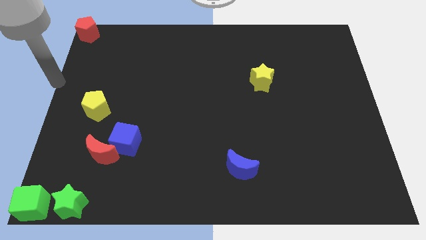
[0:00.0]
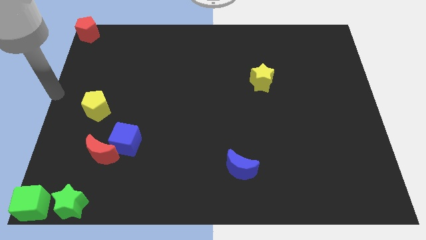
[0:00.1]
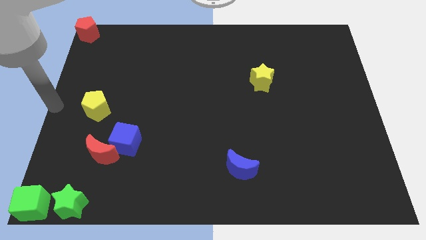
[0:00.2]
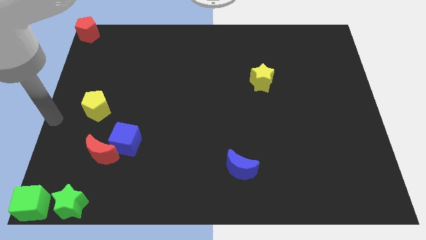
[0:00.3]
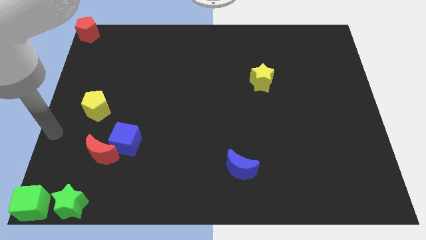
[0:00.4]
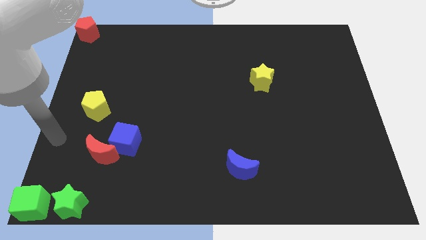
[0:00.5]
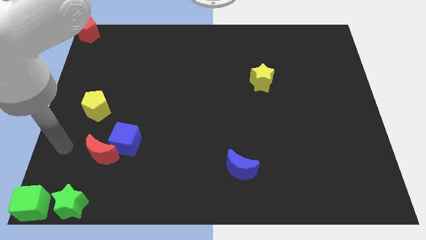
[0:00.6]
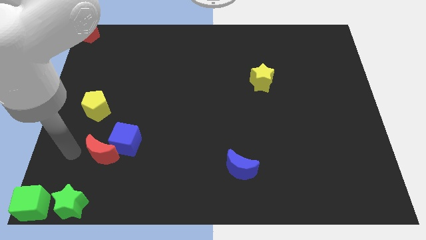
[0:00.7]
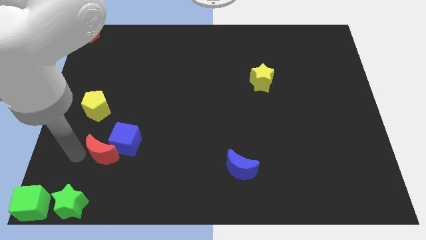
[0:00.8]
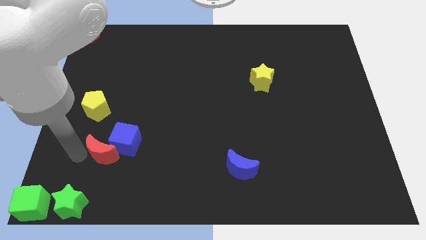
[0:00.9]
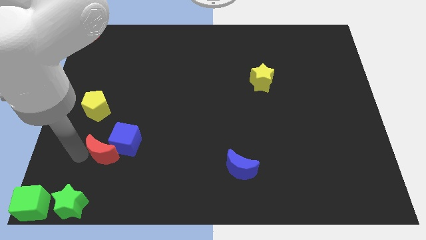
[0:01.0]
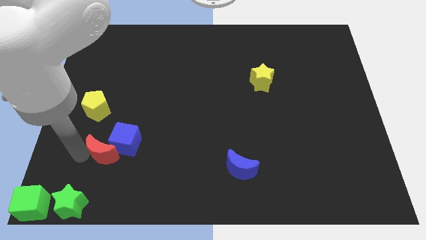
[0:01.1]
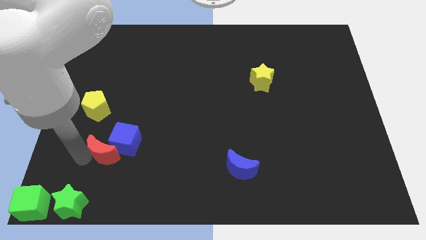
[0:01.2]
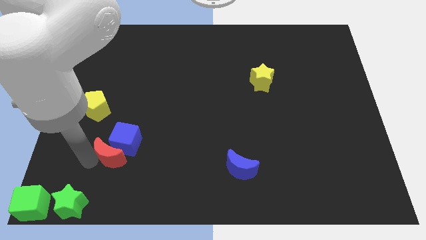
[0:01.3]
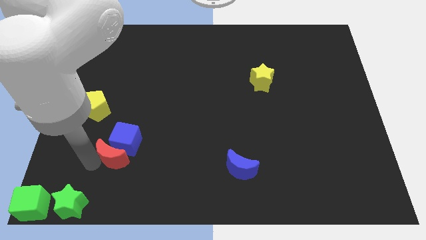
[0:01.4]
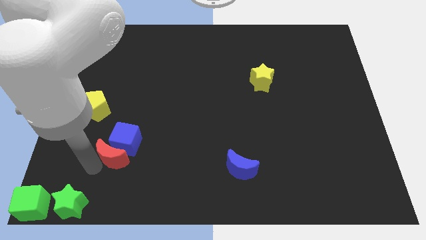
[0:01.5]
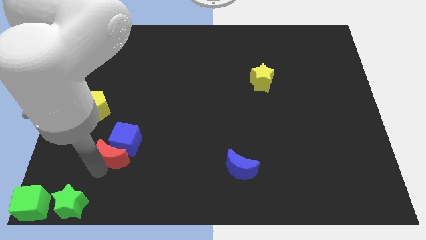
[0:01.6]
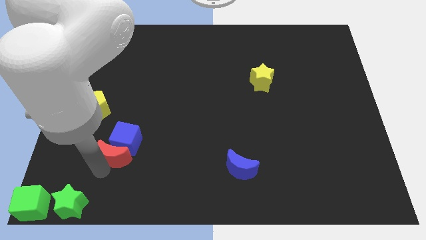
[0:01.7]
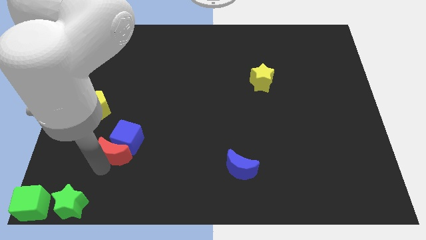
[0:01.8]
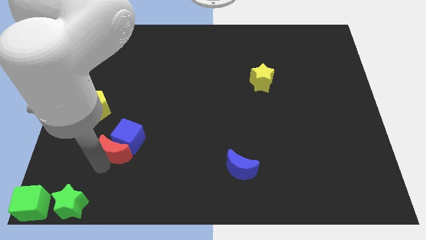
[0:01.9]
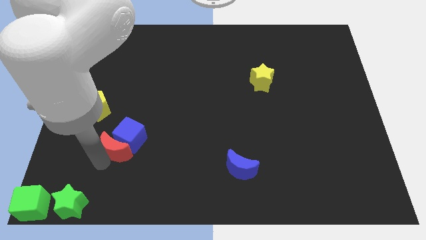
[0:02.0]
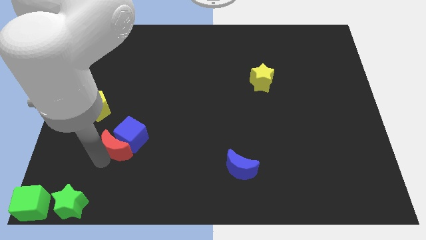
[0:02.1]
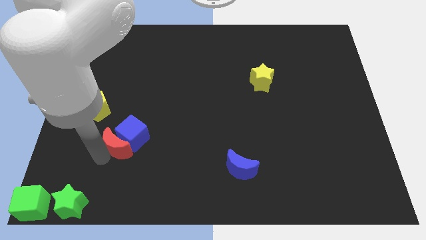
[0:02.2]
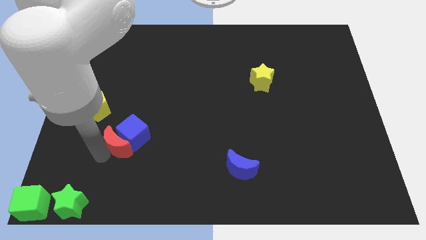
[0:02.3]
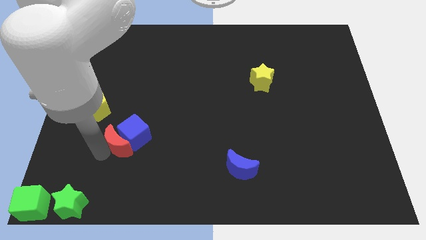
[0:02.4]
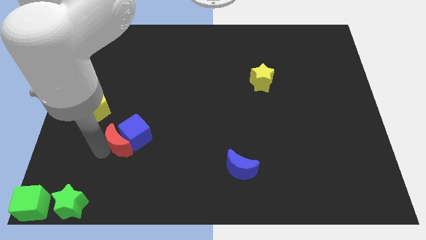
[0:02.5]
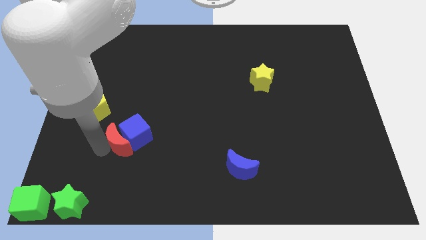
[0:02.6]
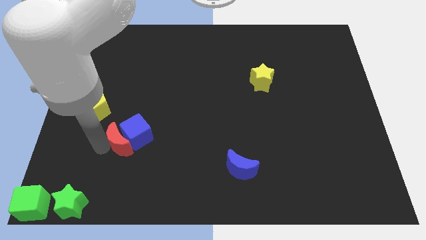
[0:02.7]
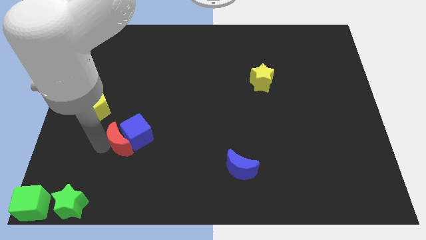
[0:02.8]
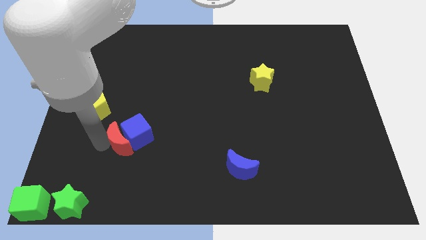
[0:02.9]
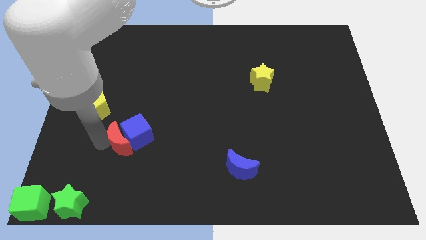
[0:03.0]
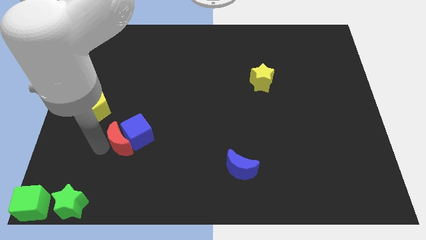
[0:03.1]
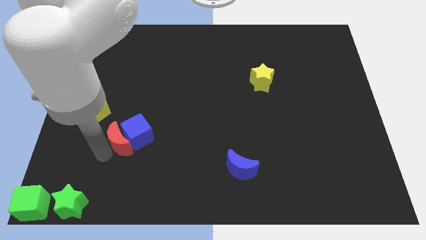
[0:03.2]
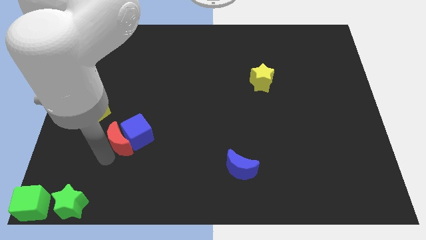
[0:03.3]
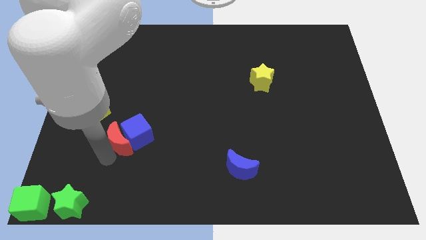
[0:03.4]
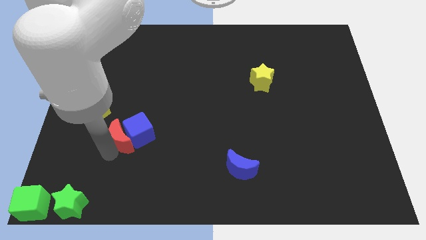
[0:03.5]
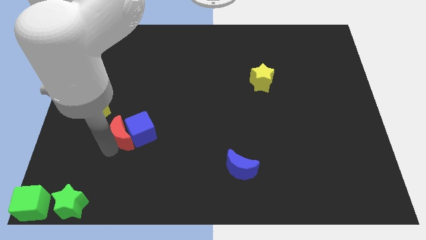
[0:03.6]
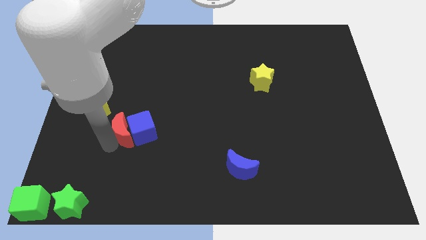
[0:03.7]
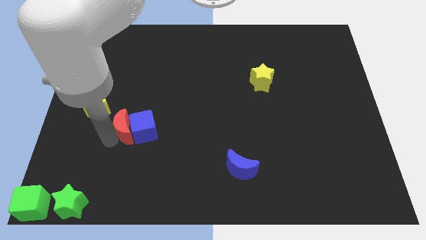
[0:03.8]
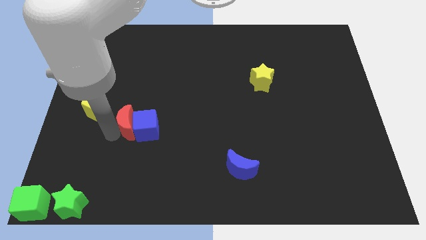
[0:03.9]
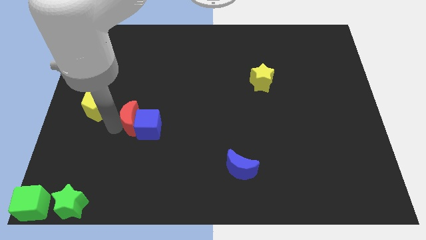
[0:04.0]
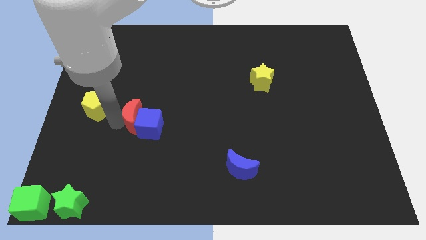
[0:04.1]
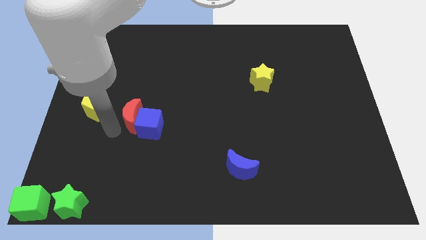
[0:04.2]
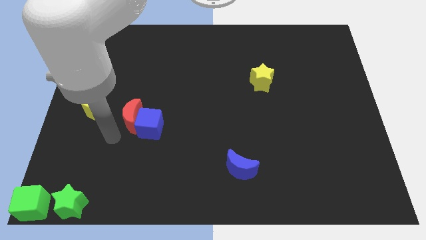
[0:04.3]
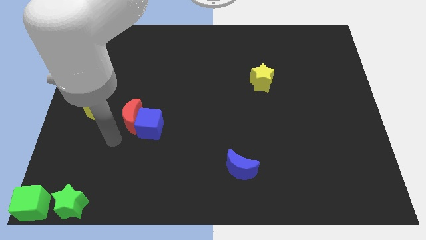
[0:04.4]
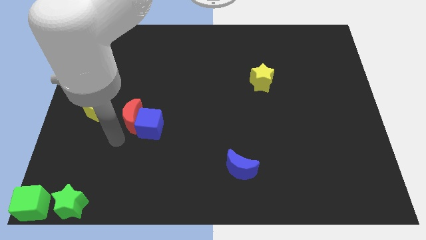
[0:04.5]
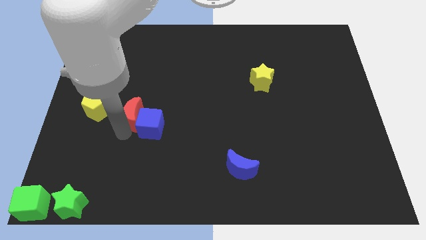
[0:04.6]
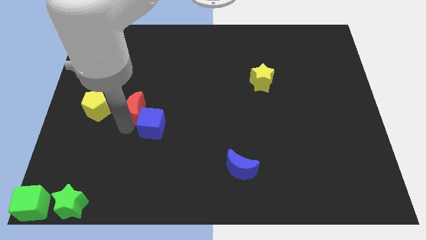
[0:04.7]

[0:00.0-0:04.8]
push the red pentagon to the left side of the blue cube

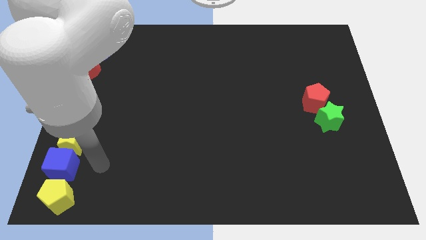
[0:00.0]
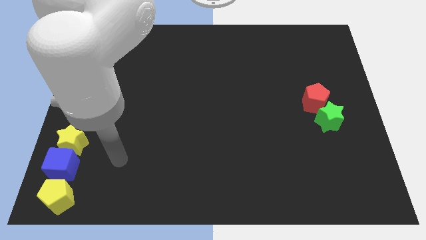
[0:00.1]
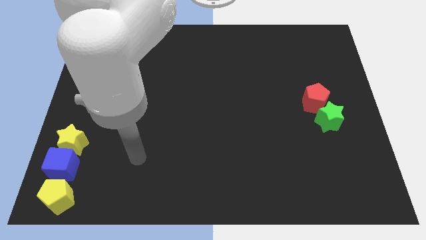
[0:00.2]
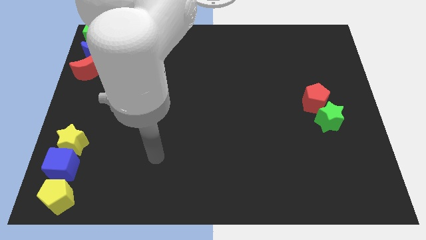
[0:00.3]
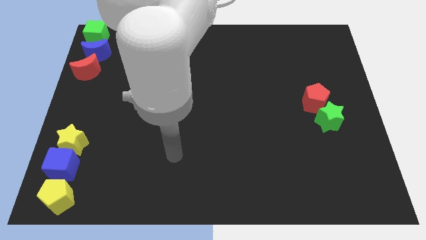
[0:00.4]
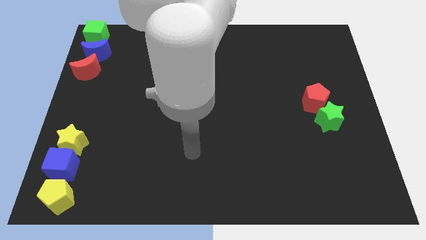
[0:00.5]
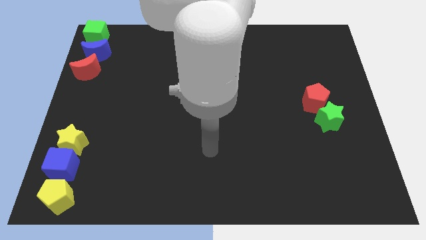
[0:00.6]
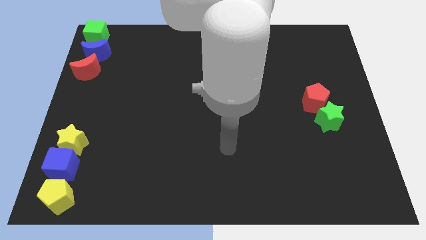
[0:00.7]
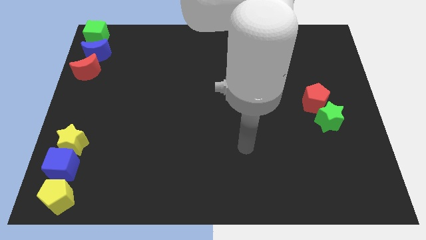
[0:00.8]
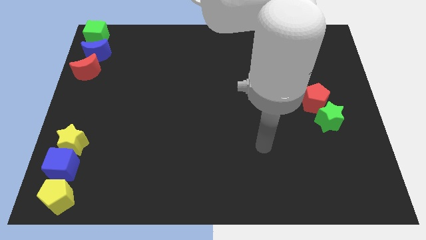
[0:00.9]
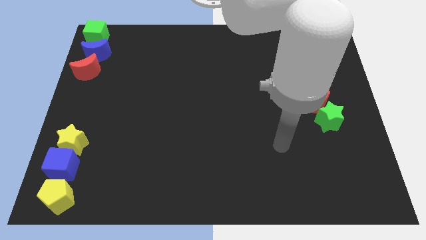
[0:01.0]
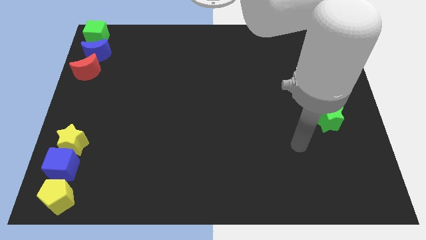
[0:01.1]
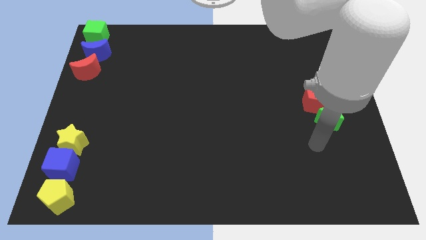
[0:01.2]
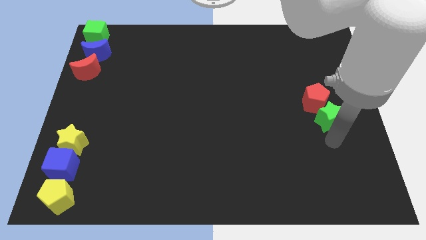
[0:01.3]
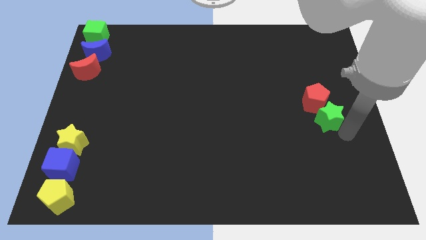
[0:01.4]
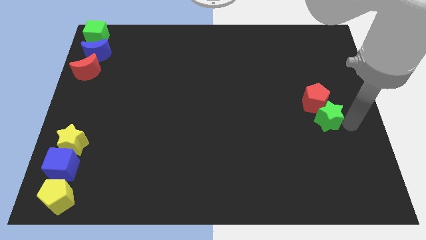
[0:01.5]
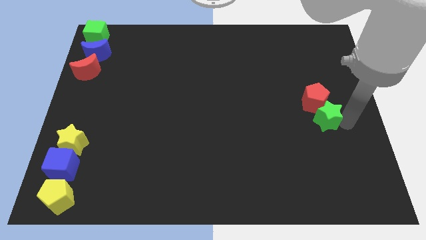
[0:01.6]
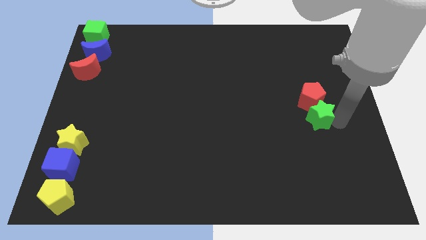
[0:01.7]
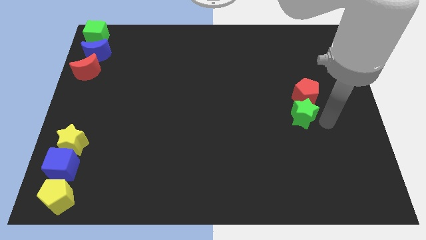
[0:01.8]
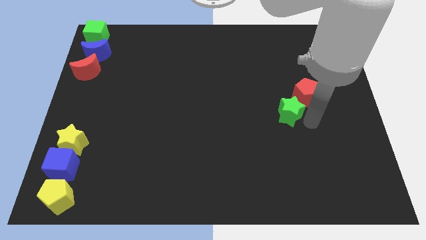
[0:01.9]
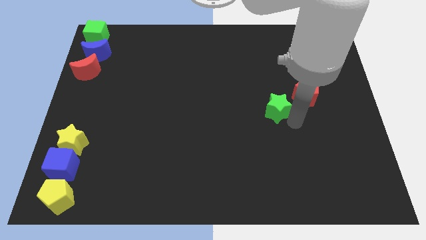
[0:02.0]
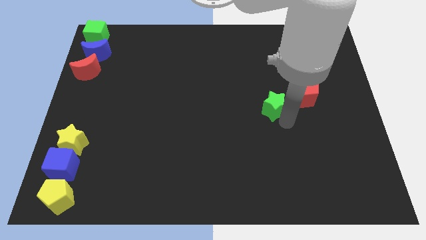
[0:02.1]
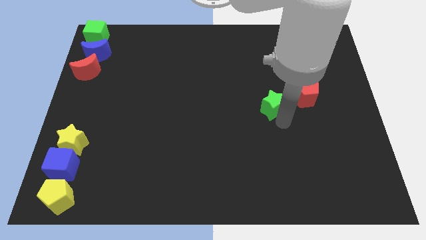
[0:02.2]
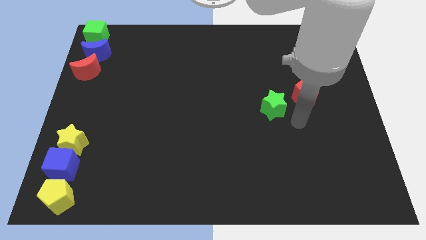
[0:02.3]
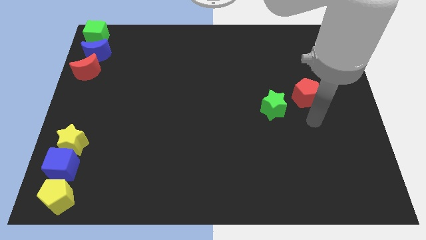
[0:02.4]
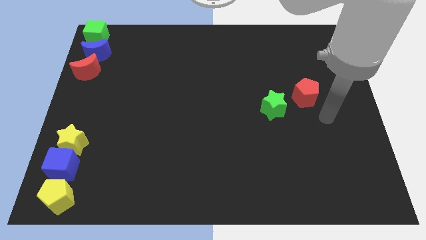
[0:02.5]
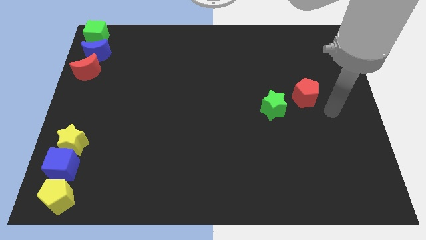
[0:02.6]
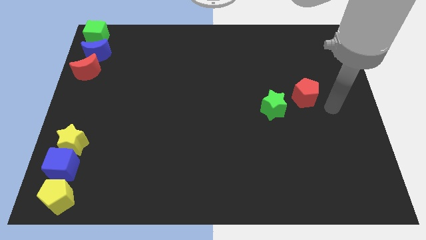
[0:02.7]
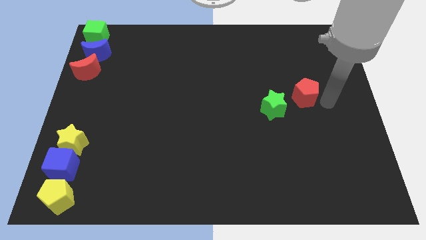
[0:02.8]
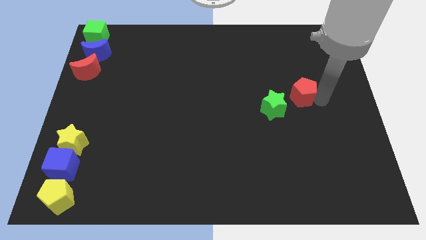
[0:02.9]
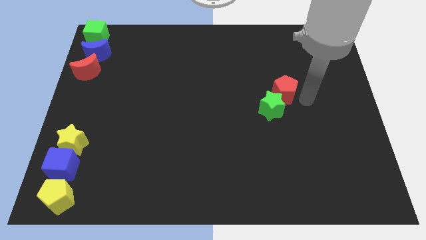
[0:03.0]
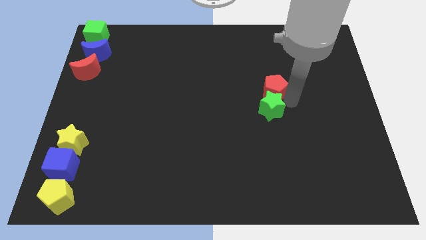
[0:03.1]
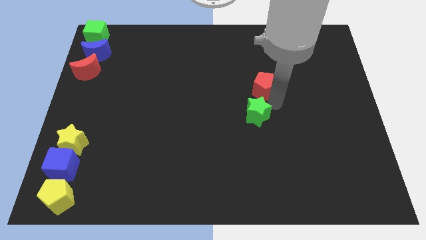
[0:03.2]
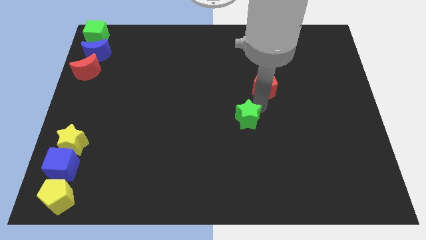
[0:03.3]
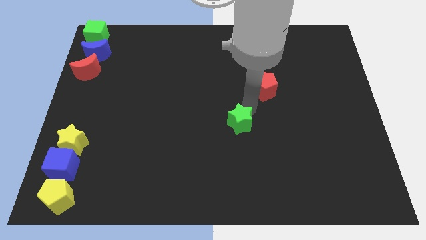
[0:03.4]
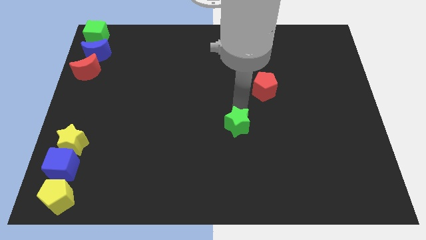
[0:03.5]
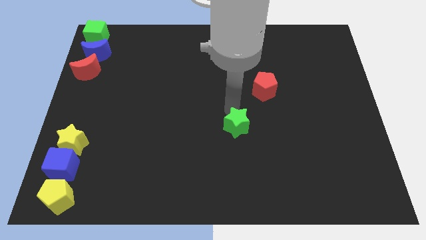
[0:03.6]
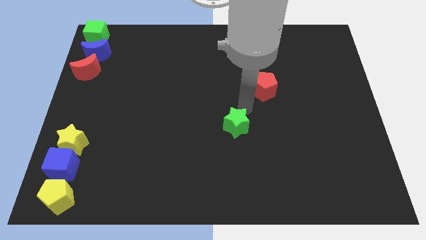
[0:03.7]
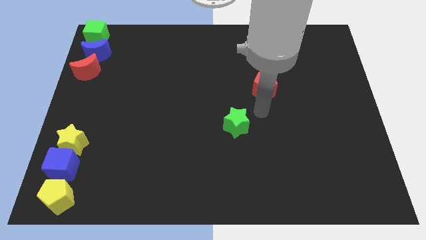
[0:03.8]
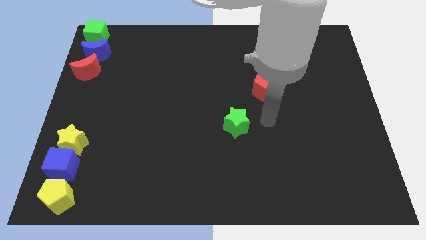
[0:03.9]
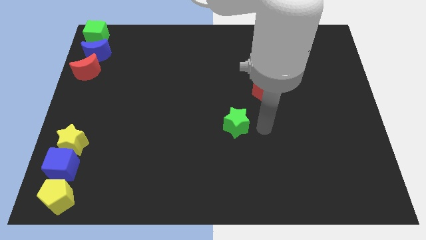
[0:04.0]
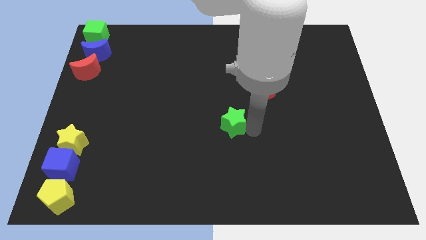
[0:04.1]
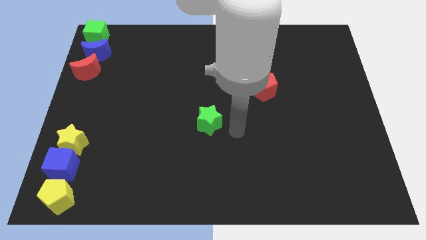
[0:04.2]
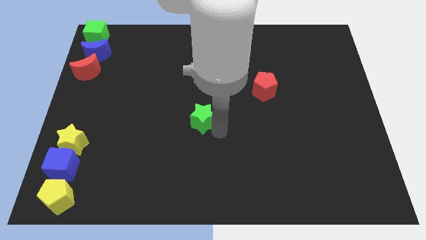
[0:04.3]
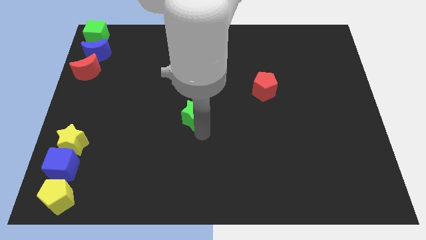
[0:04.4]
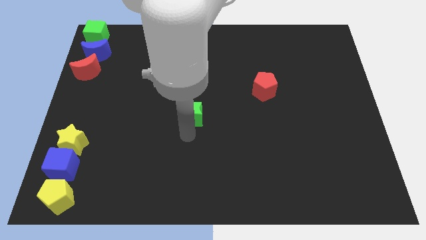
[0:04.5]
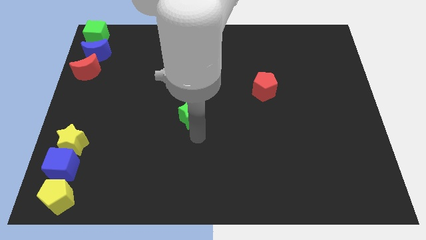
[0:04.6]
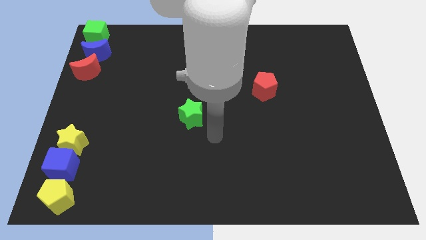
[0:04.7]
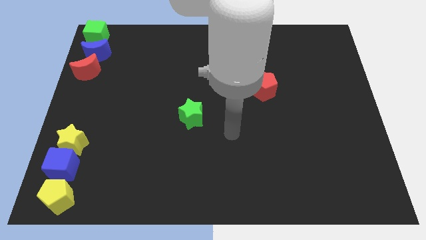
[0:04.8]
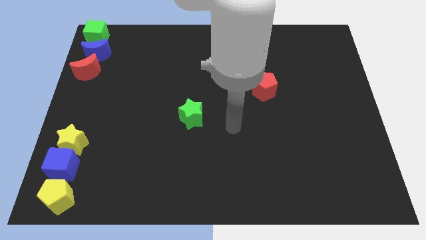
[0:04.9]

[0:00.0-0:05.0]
push the green star to the bottom left of the red pentagon
